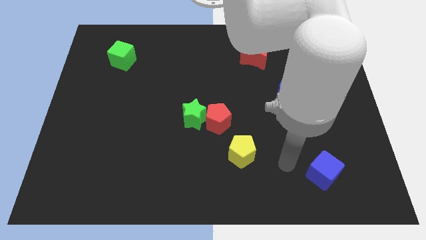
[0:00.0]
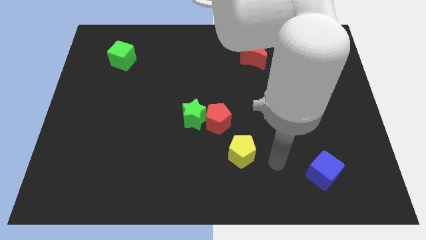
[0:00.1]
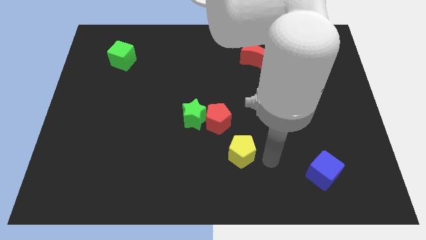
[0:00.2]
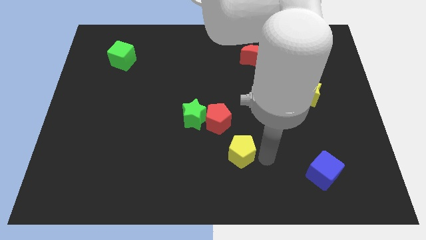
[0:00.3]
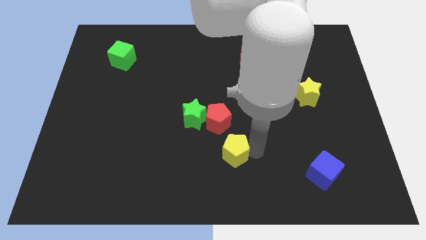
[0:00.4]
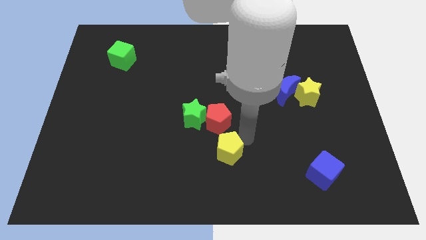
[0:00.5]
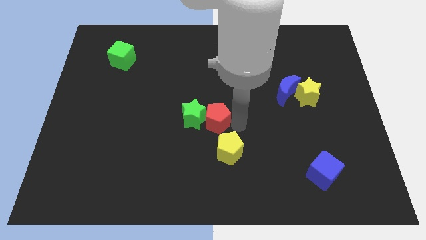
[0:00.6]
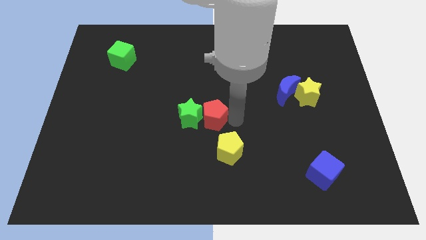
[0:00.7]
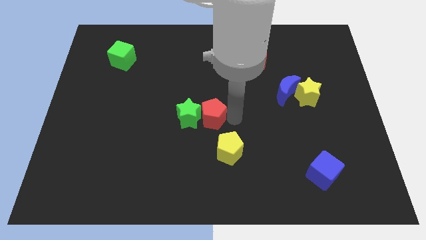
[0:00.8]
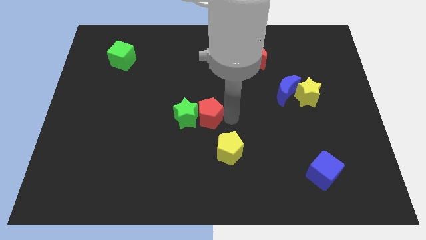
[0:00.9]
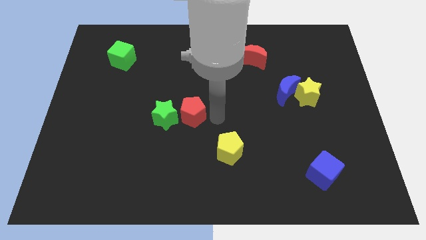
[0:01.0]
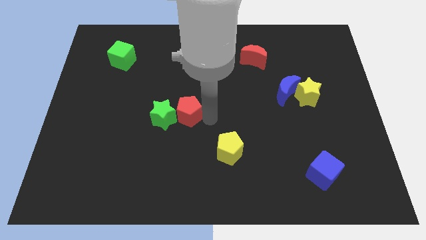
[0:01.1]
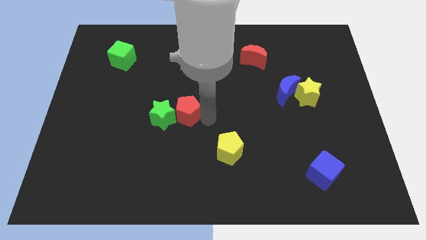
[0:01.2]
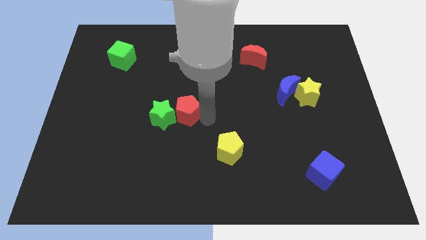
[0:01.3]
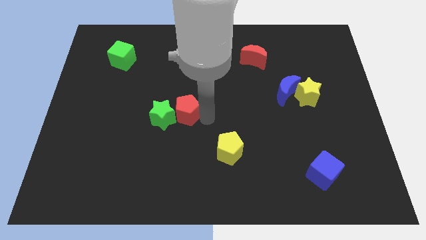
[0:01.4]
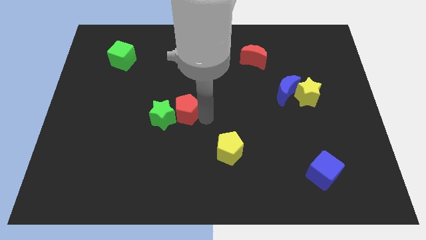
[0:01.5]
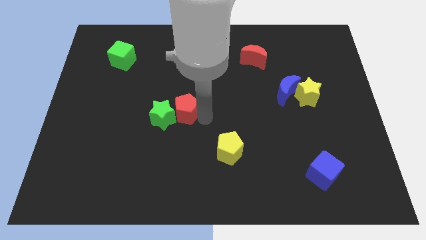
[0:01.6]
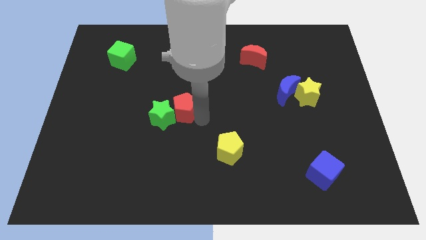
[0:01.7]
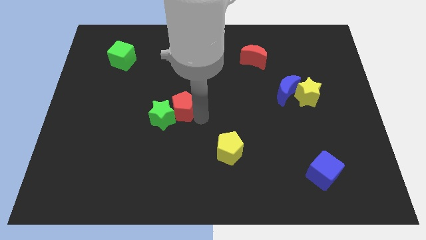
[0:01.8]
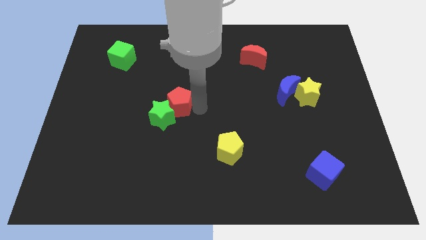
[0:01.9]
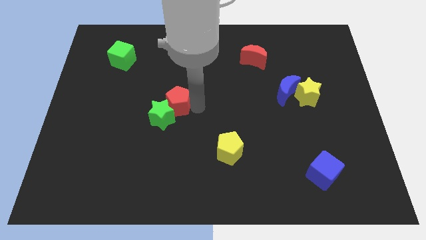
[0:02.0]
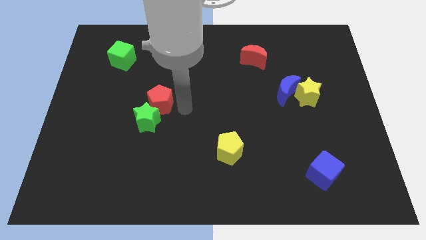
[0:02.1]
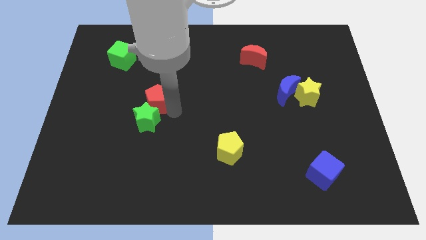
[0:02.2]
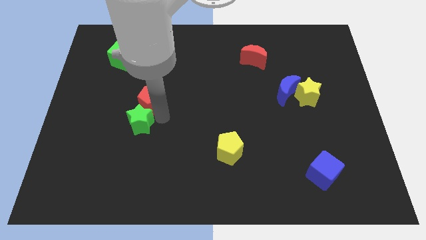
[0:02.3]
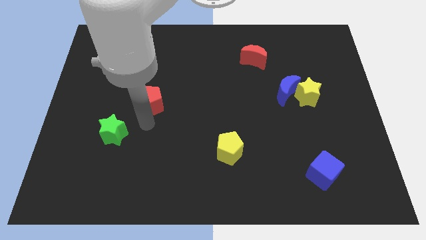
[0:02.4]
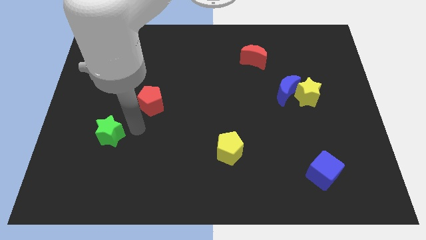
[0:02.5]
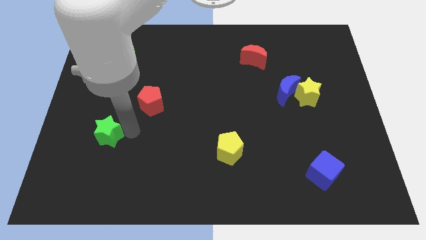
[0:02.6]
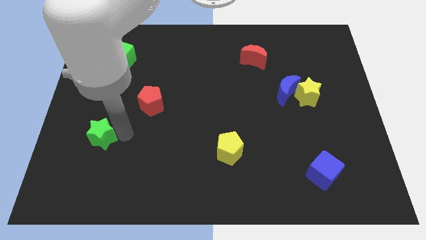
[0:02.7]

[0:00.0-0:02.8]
separate the green star and the red pentagon

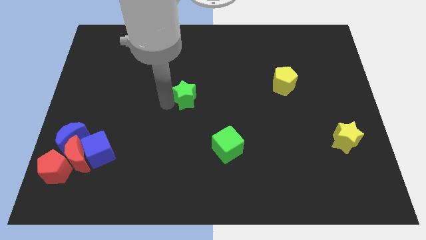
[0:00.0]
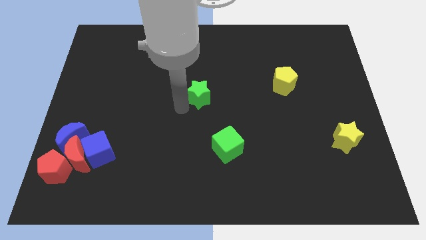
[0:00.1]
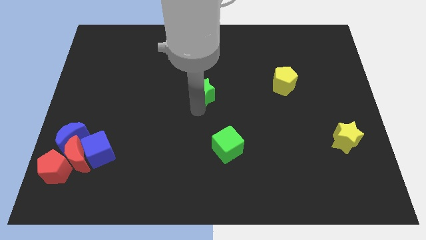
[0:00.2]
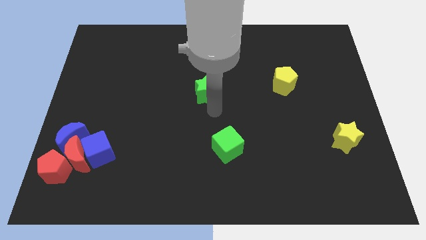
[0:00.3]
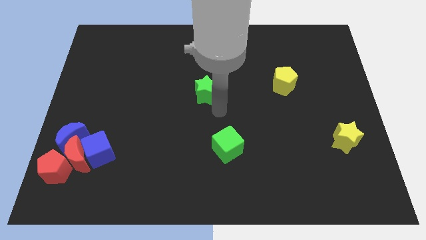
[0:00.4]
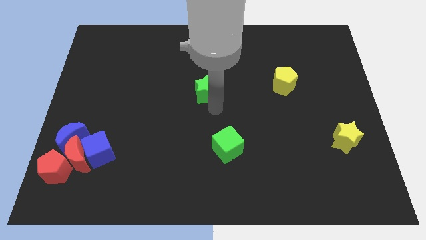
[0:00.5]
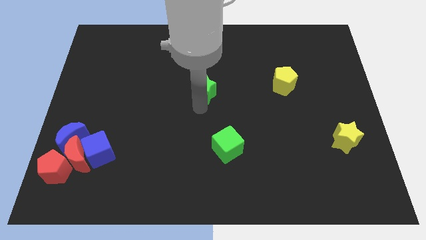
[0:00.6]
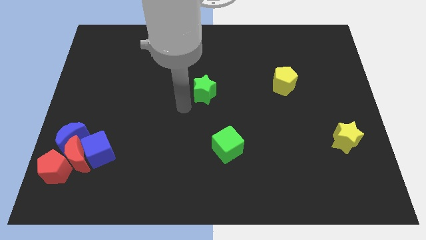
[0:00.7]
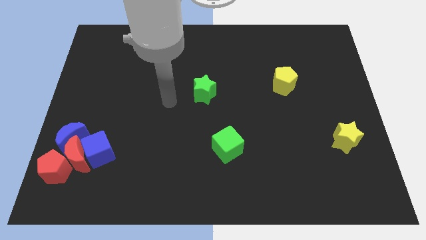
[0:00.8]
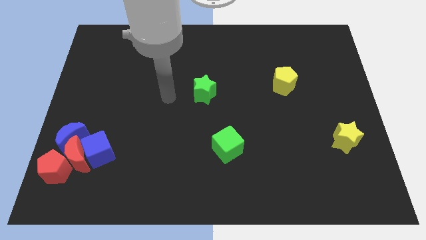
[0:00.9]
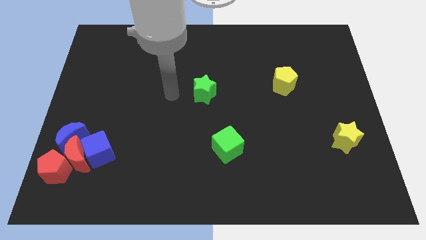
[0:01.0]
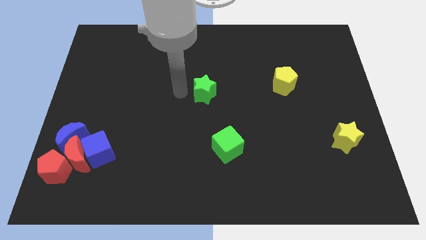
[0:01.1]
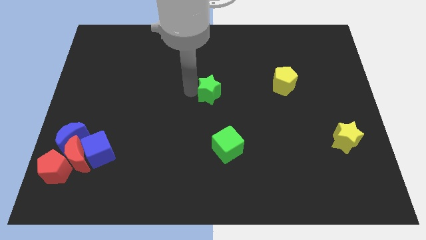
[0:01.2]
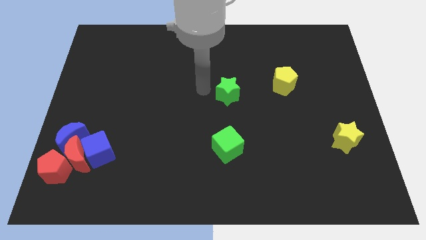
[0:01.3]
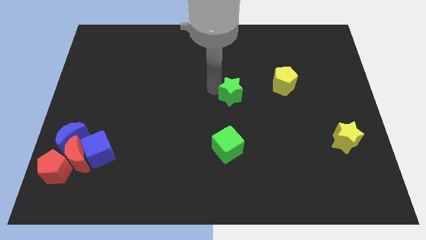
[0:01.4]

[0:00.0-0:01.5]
put the green star vertically above the green cube

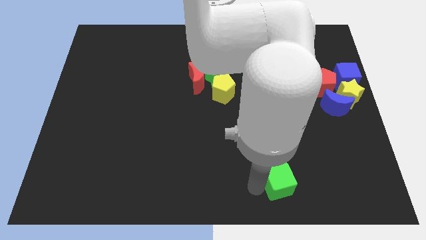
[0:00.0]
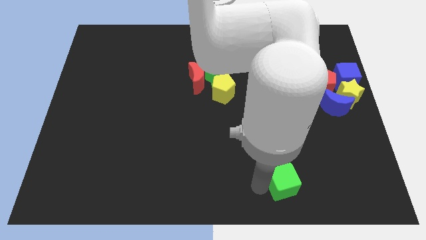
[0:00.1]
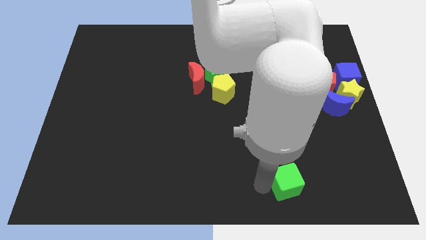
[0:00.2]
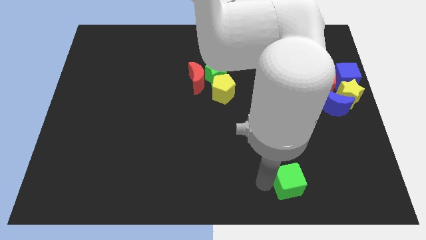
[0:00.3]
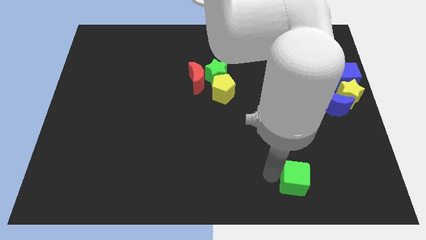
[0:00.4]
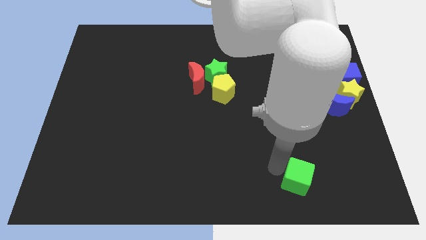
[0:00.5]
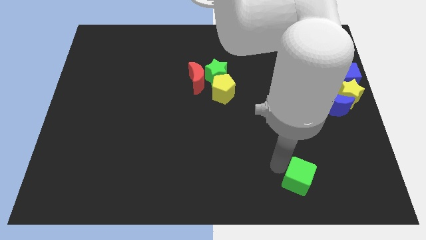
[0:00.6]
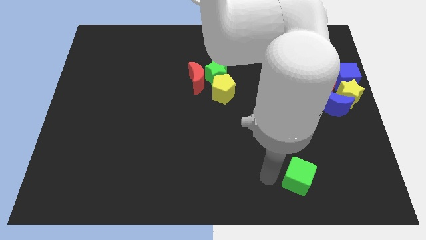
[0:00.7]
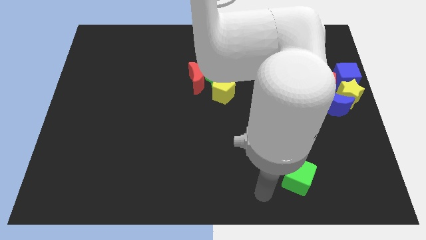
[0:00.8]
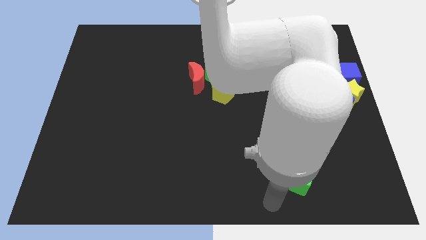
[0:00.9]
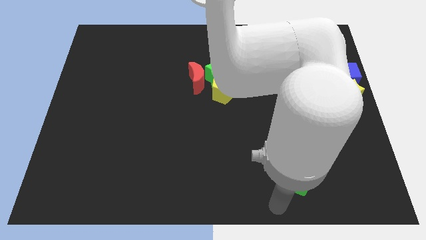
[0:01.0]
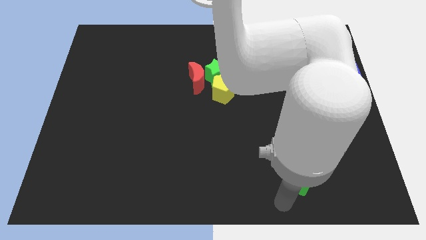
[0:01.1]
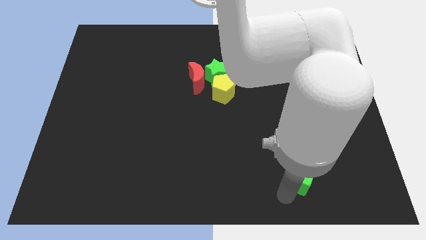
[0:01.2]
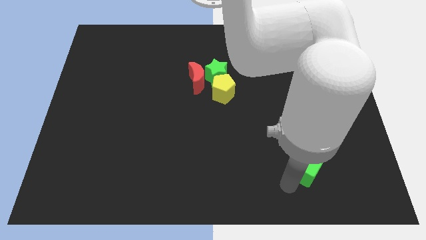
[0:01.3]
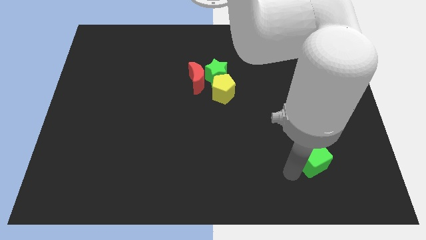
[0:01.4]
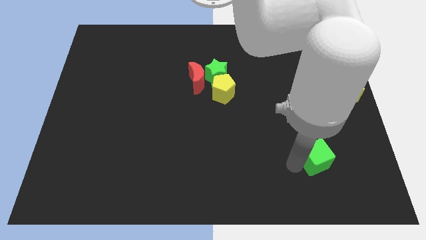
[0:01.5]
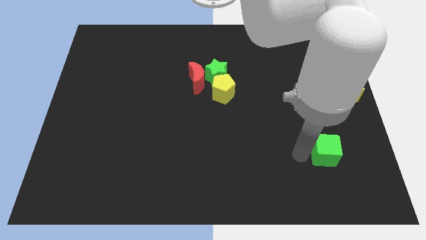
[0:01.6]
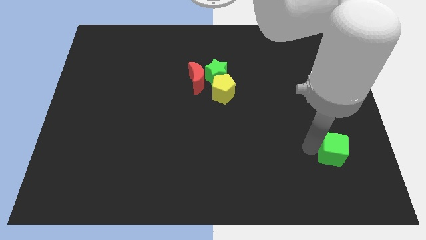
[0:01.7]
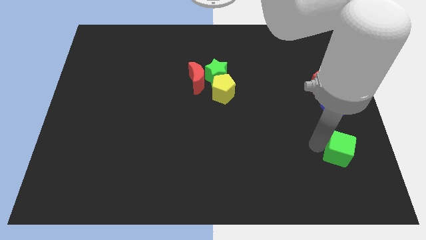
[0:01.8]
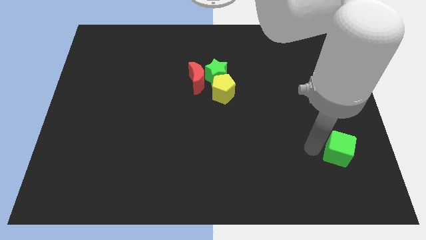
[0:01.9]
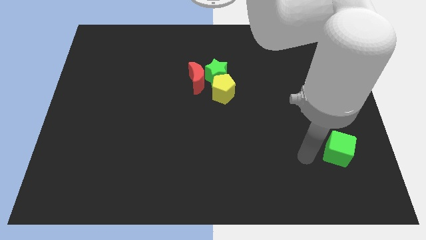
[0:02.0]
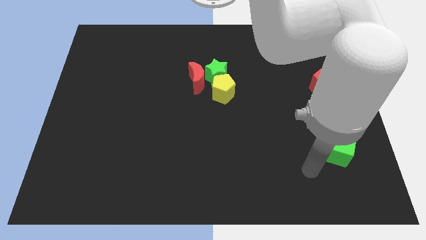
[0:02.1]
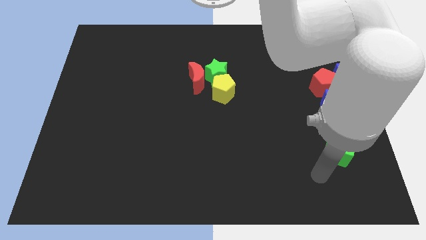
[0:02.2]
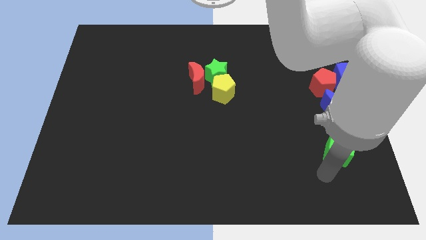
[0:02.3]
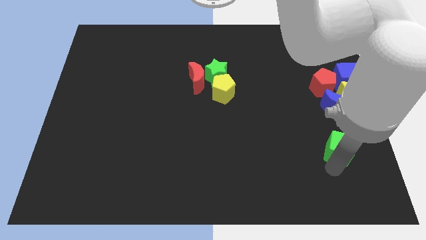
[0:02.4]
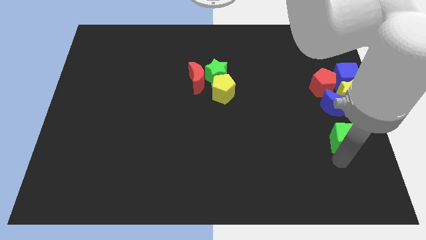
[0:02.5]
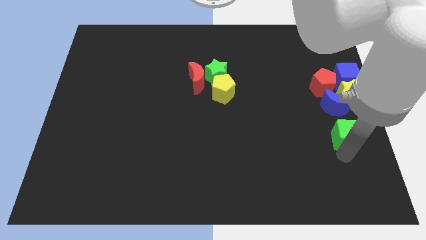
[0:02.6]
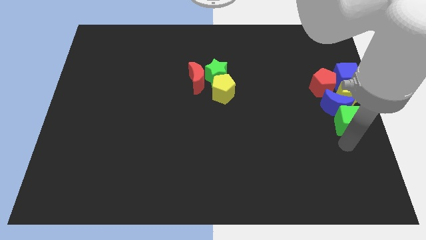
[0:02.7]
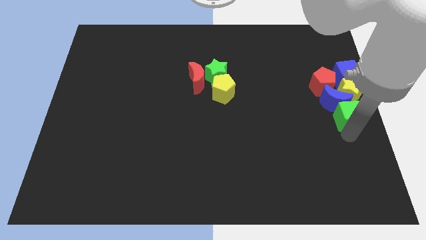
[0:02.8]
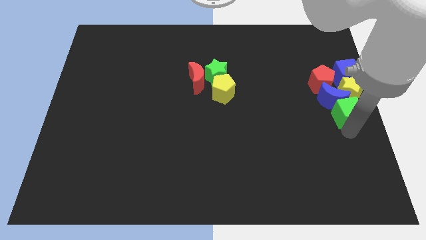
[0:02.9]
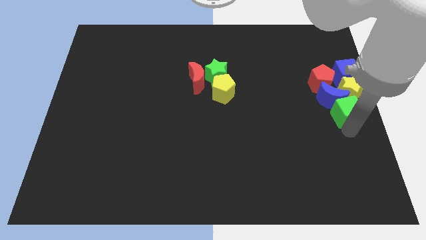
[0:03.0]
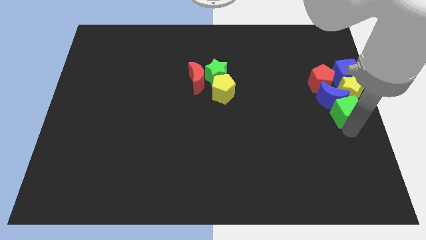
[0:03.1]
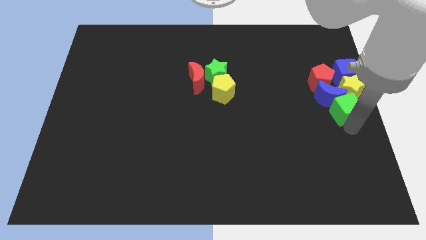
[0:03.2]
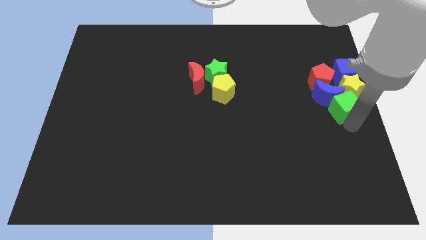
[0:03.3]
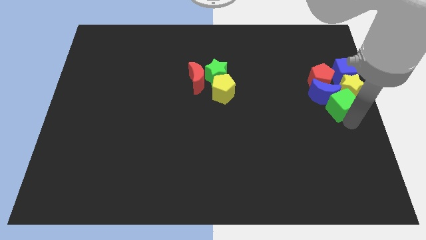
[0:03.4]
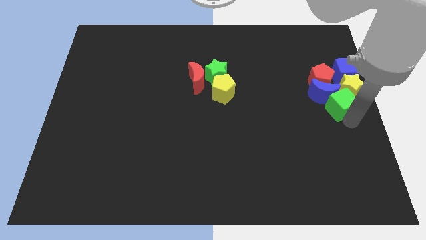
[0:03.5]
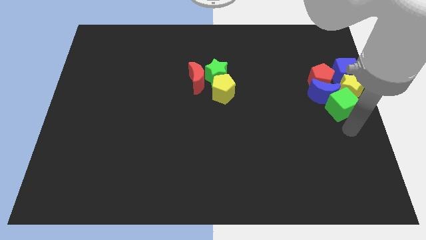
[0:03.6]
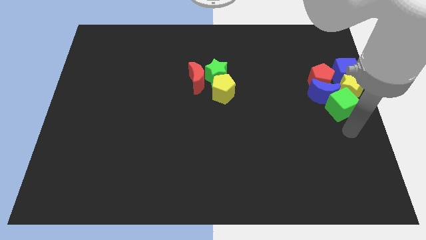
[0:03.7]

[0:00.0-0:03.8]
push the green cube into the group of blocks on the center left

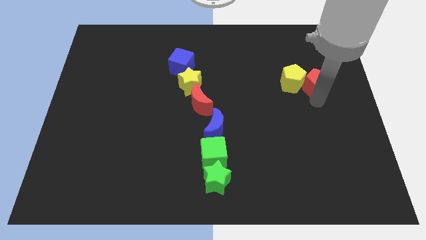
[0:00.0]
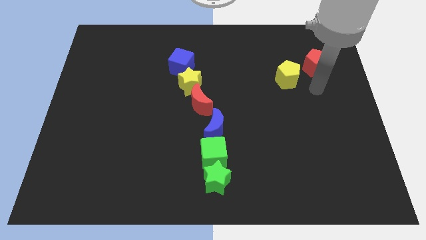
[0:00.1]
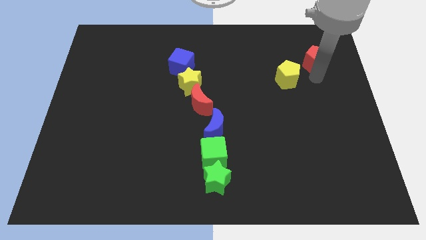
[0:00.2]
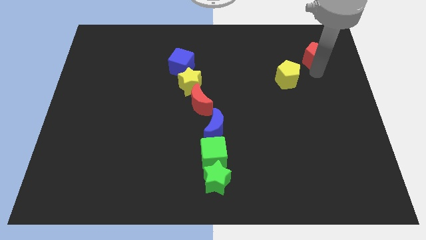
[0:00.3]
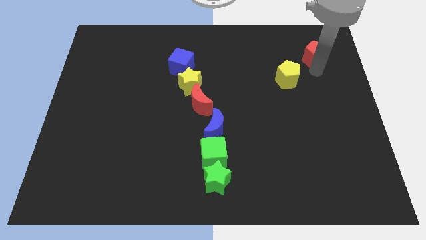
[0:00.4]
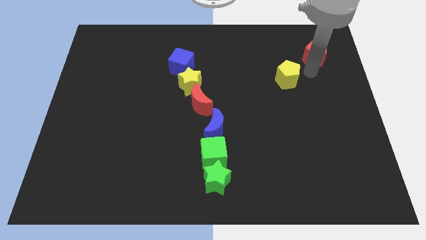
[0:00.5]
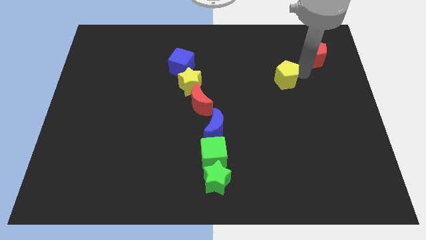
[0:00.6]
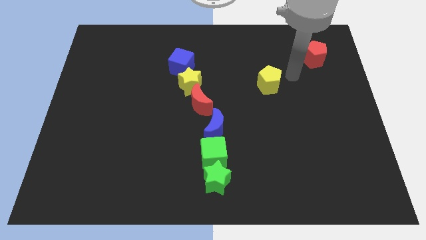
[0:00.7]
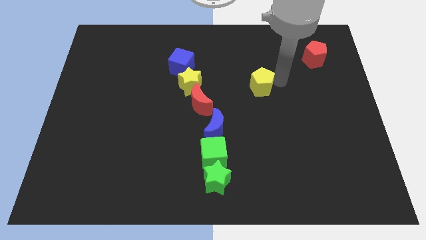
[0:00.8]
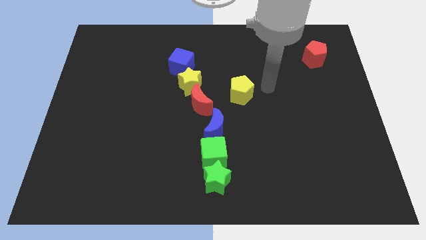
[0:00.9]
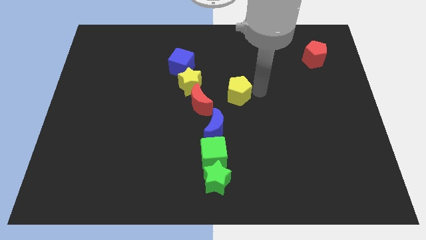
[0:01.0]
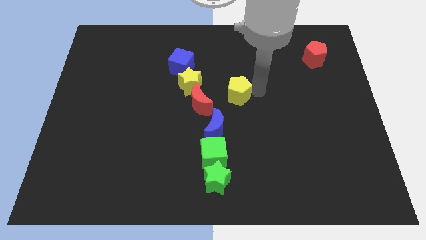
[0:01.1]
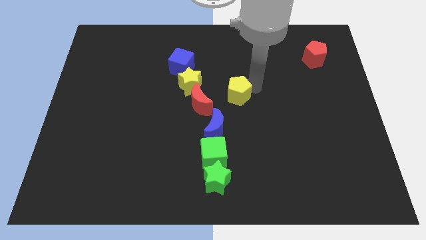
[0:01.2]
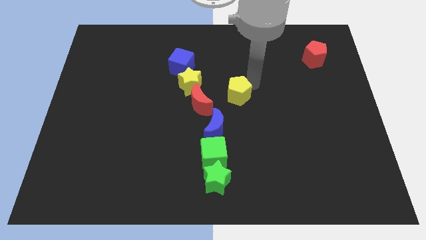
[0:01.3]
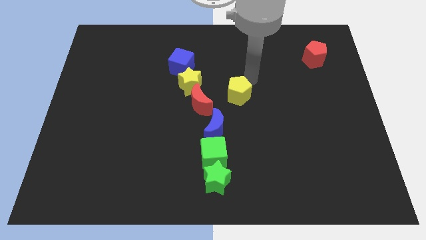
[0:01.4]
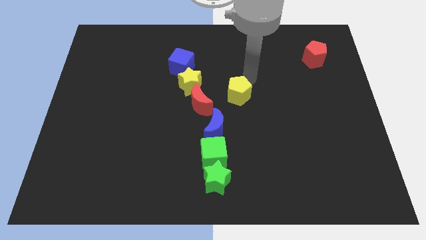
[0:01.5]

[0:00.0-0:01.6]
move the red and the yellow pentagon diagonal to each other
